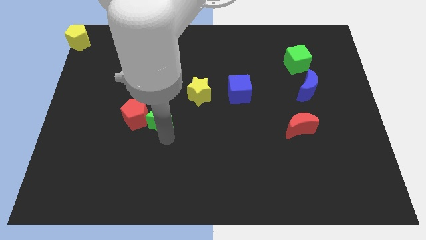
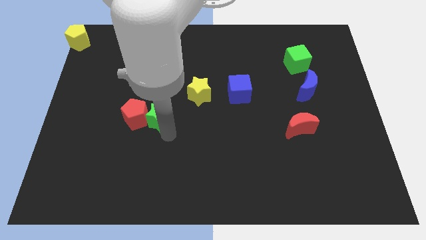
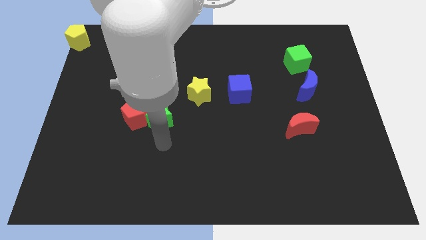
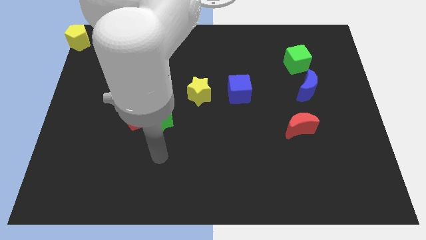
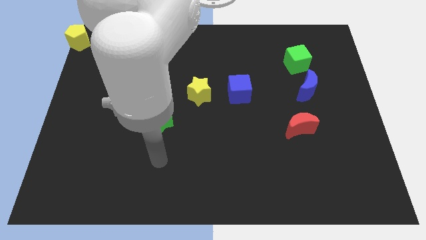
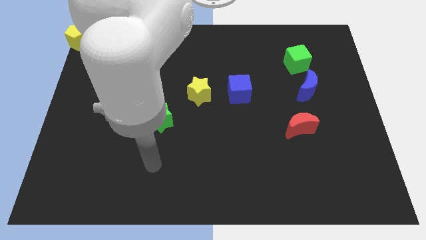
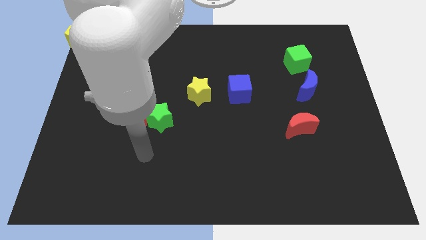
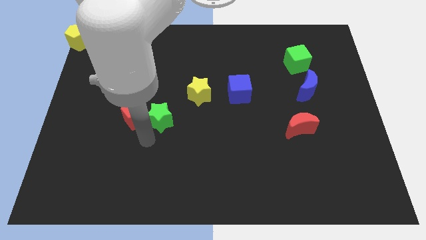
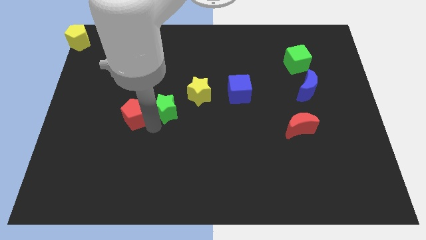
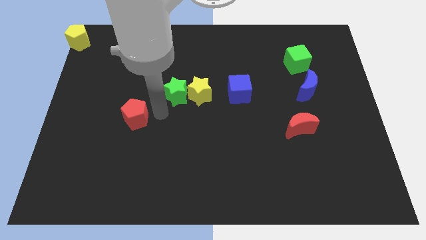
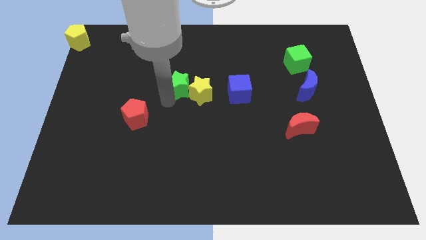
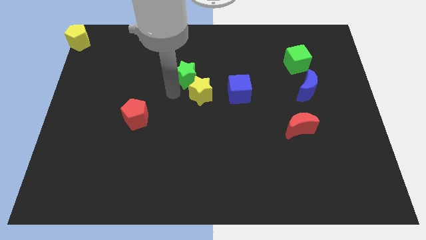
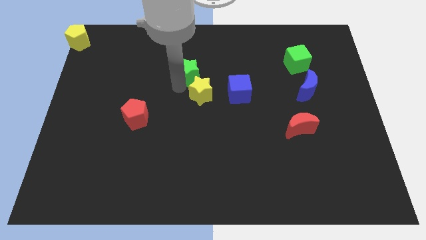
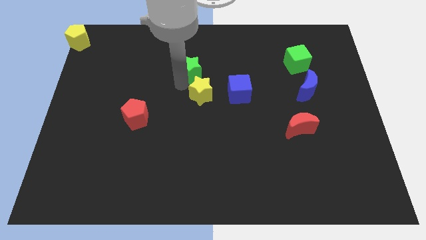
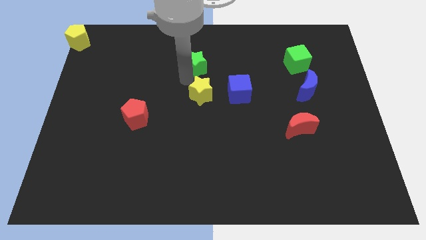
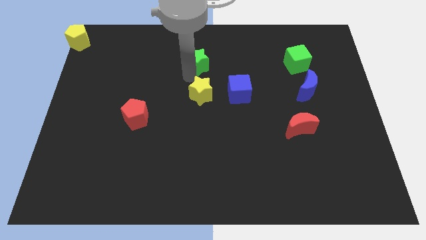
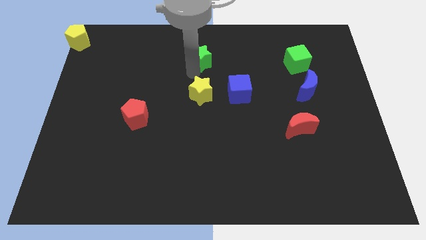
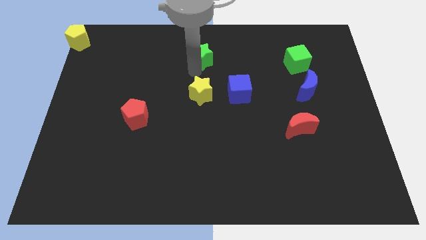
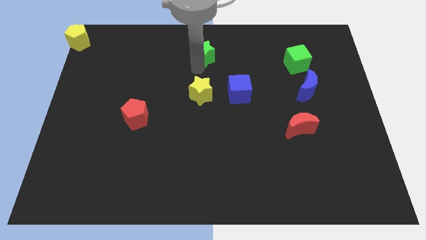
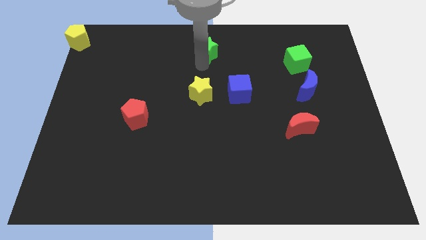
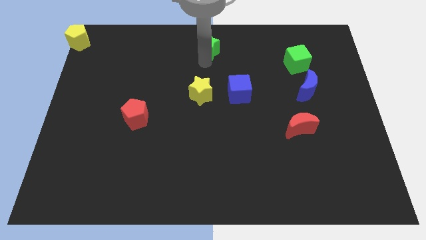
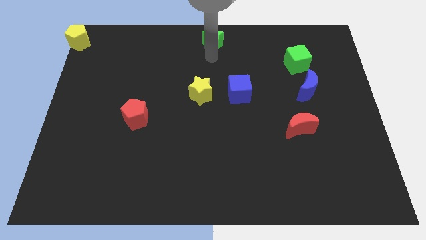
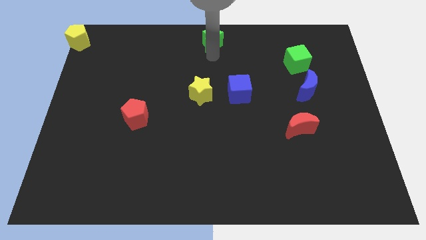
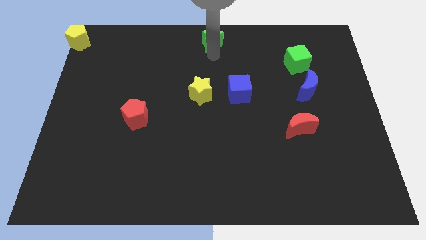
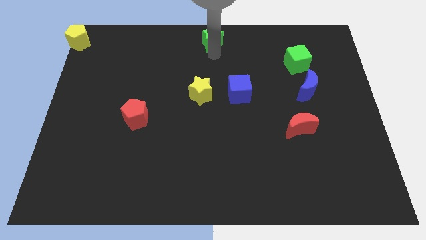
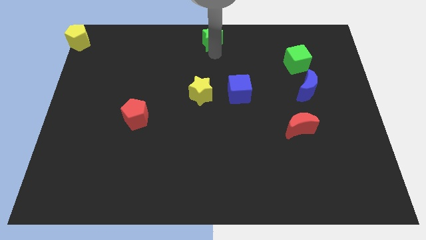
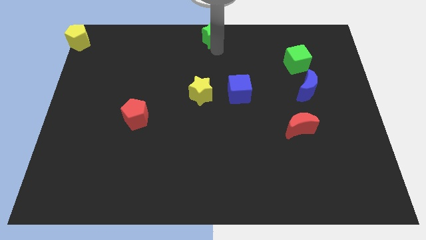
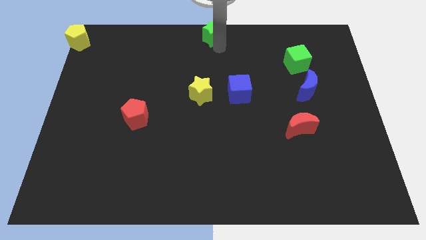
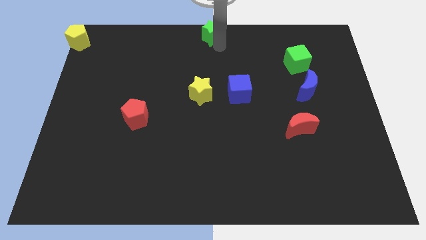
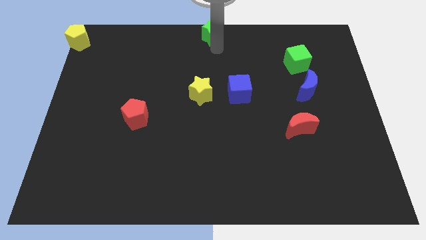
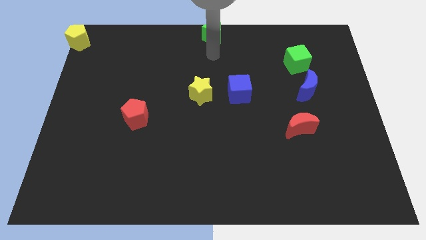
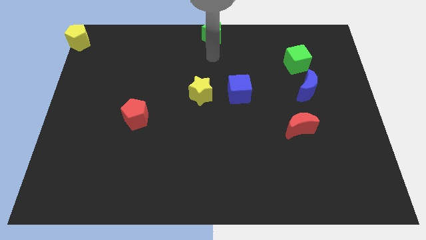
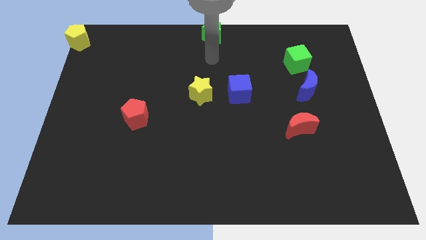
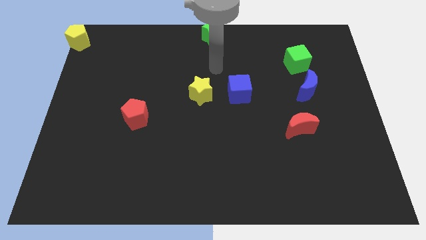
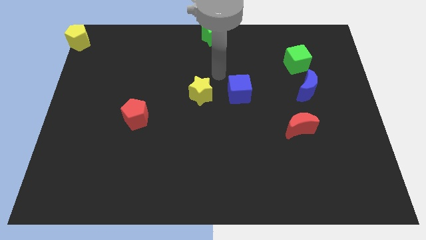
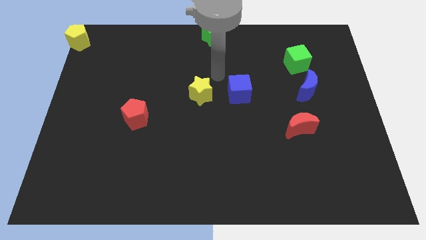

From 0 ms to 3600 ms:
push the green star to the top center of the board

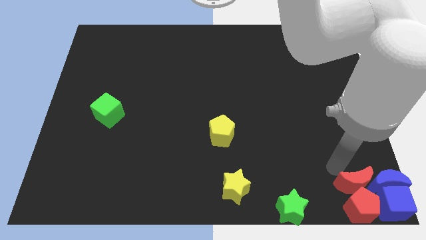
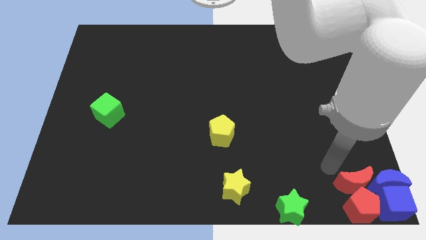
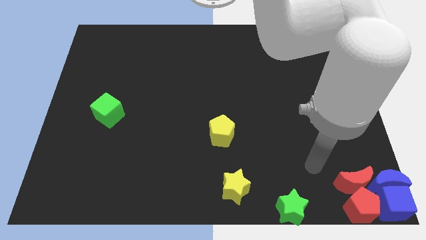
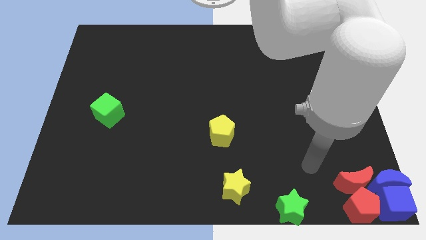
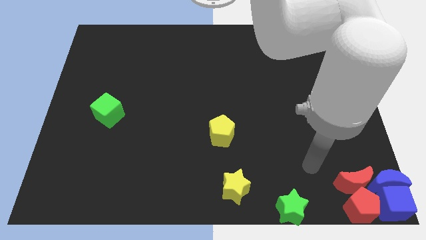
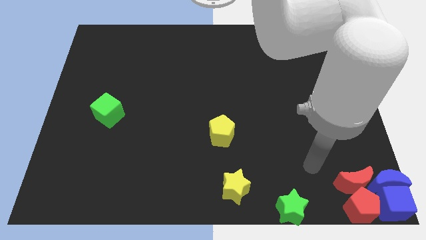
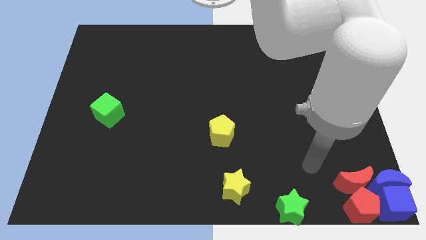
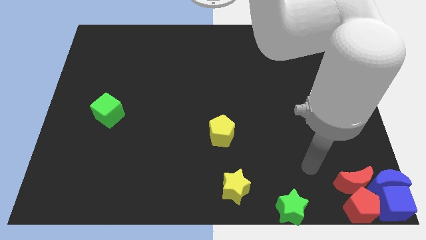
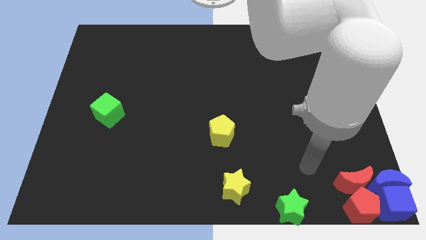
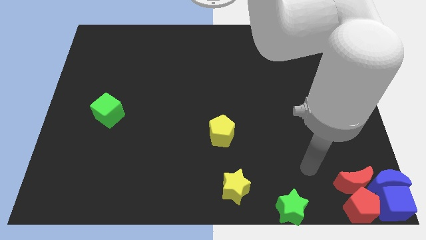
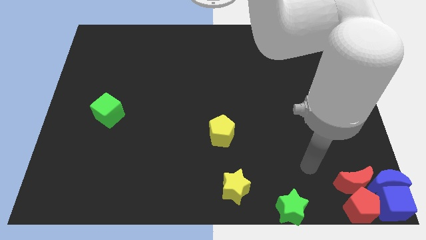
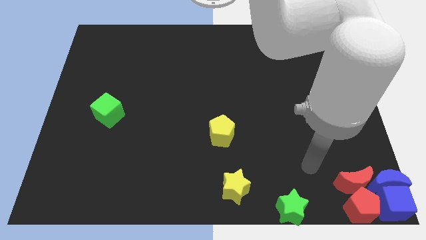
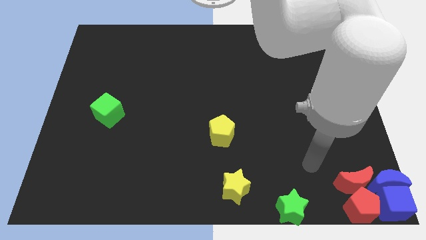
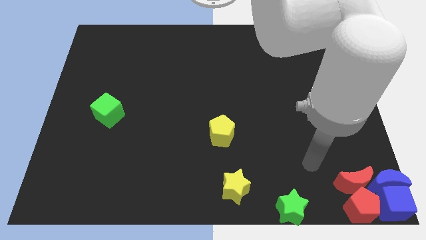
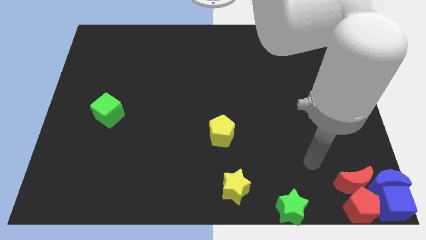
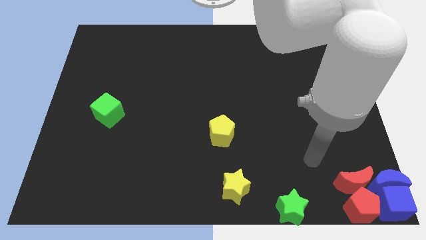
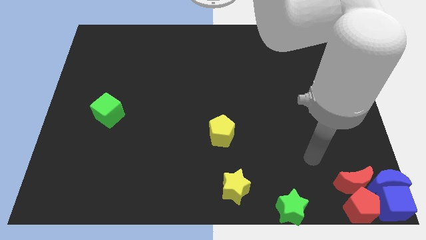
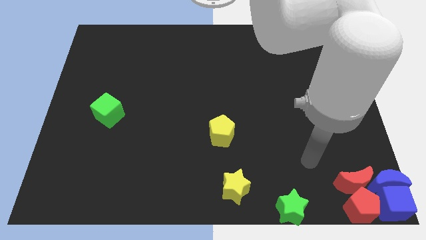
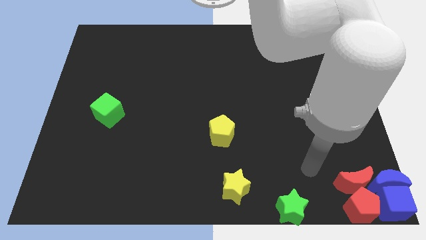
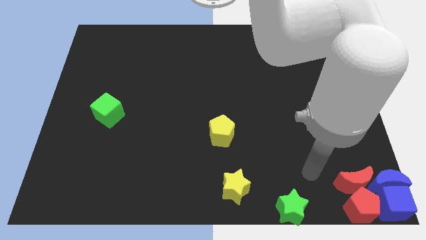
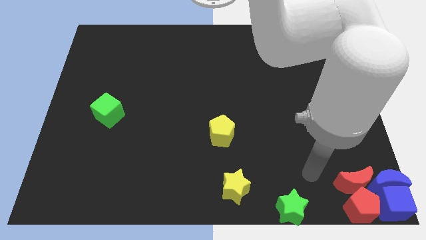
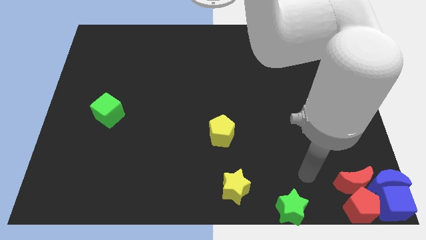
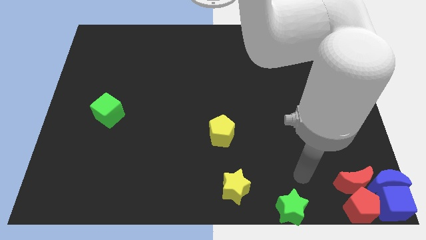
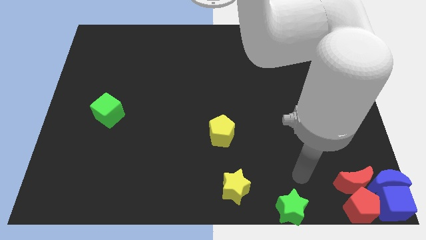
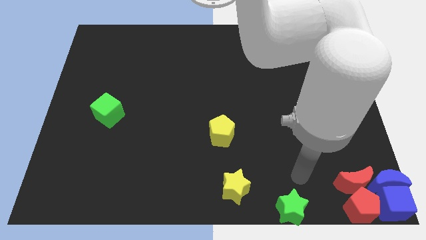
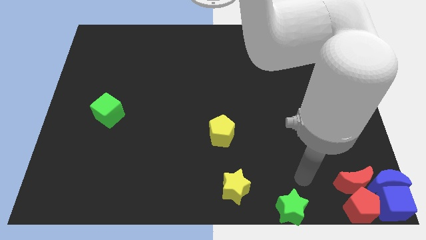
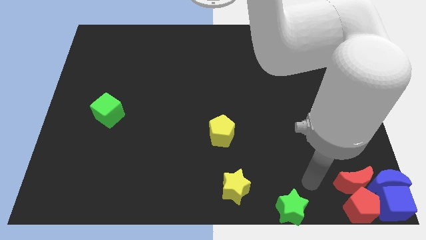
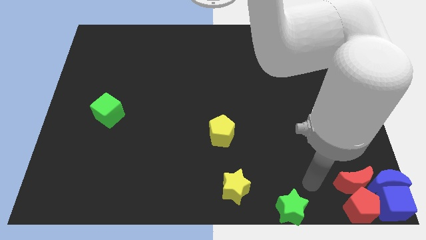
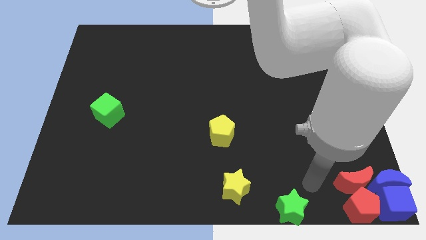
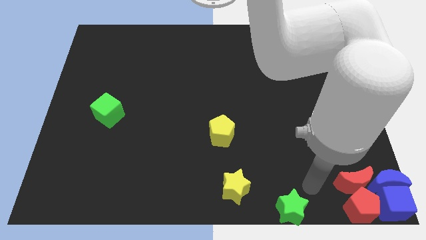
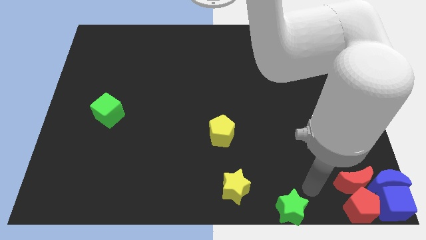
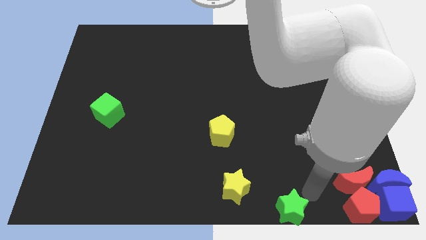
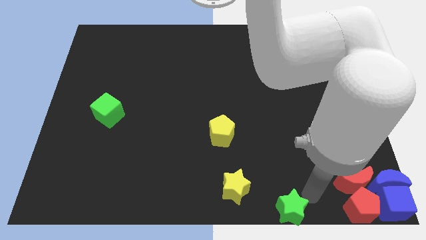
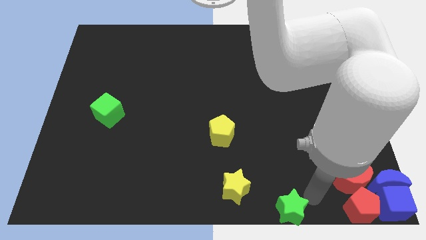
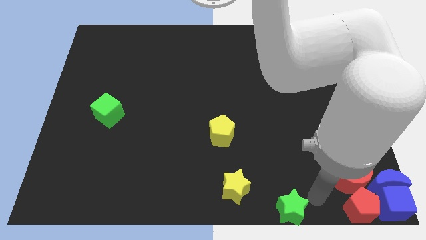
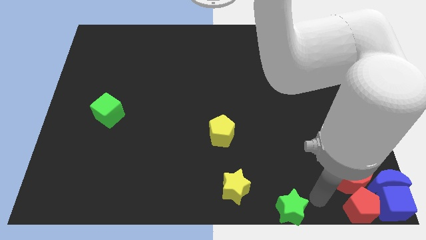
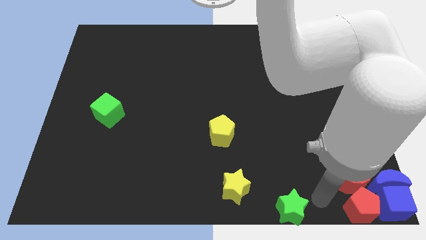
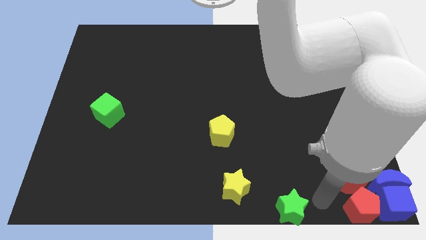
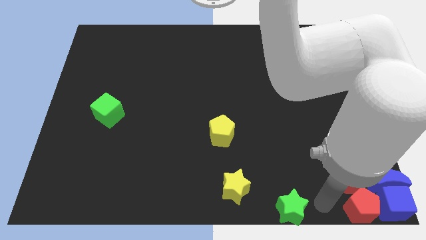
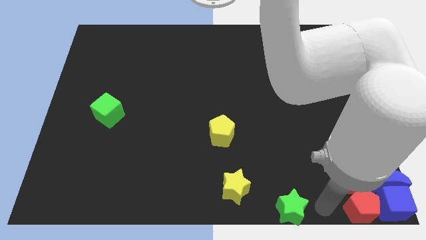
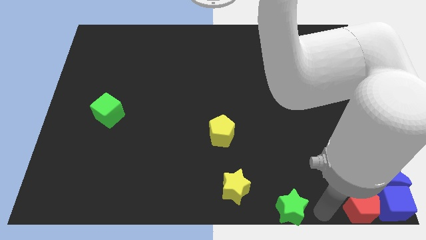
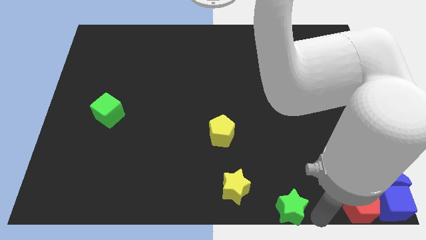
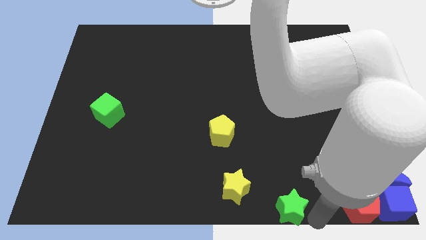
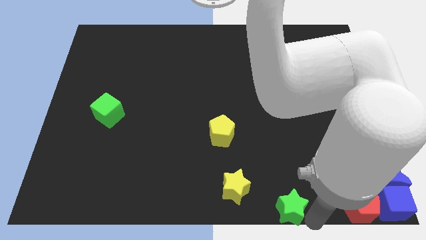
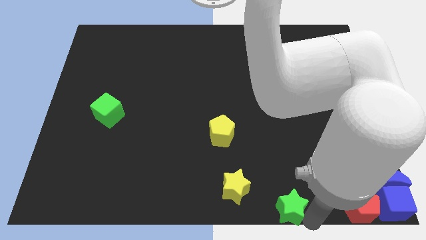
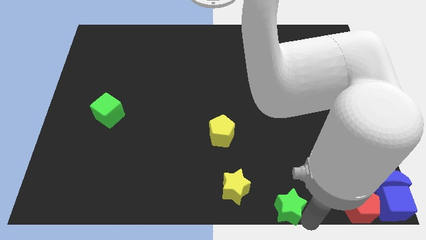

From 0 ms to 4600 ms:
point your arm right to green star

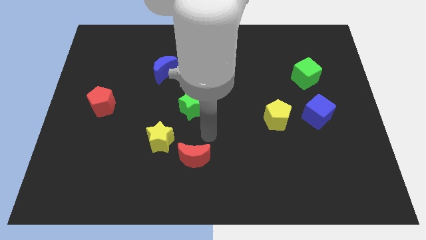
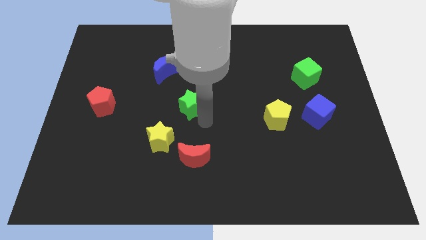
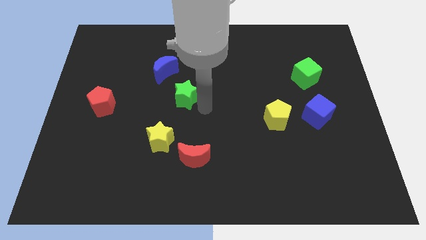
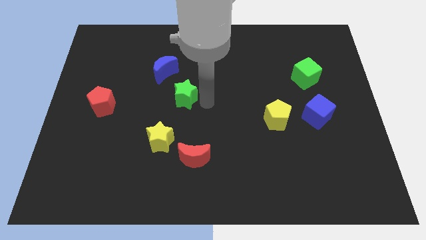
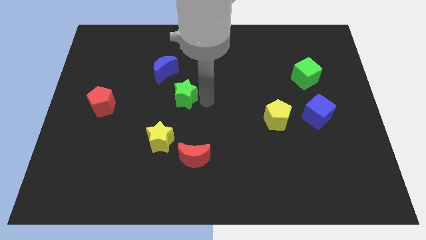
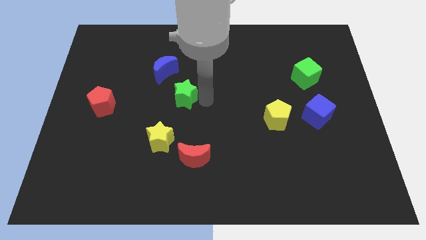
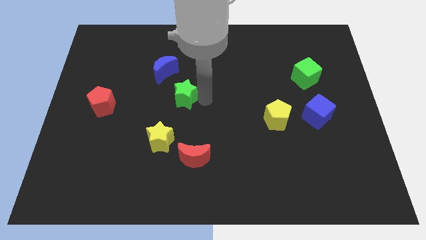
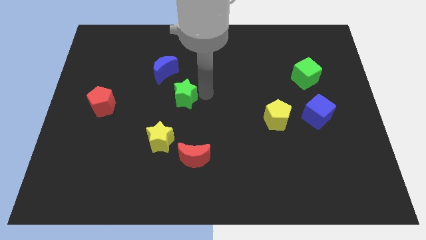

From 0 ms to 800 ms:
move the green star slightly to the left
